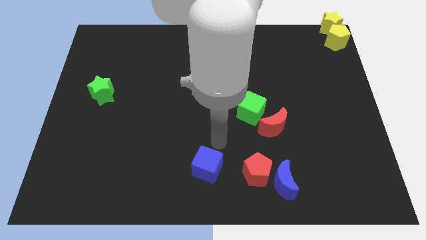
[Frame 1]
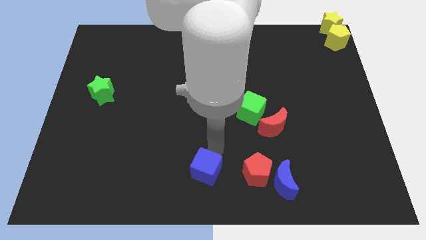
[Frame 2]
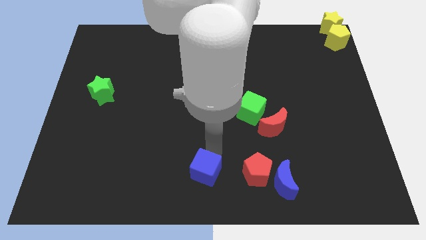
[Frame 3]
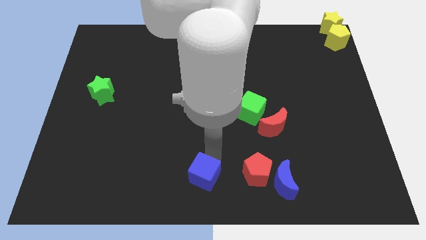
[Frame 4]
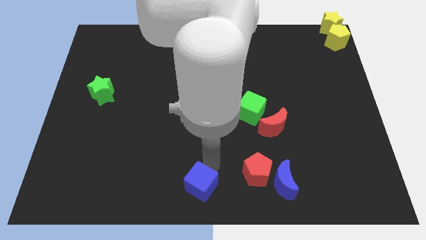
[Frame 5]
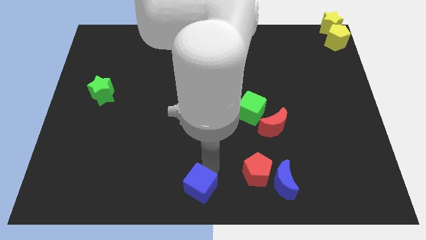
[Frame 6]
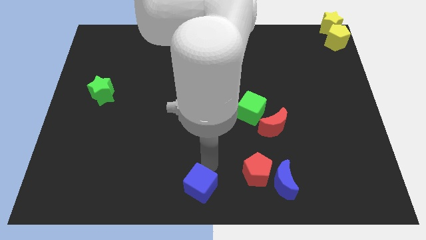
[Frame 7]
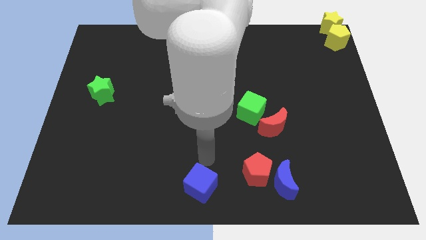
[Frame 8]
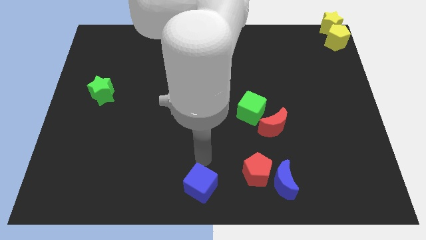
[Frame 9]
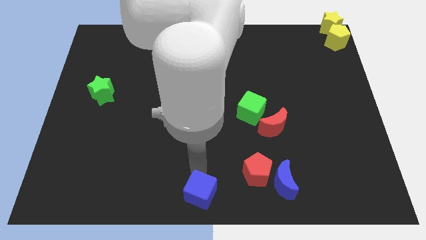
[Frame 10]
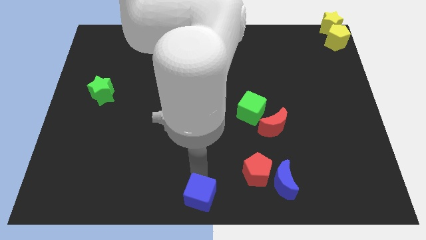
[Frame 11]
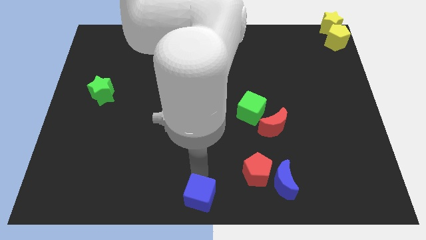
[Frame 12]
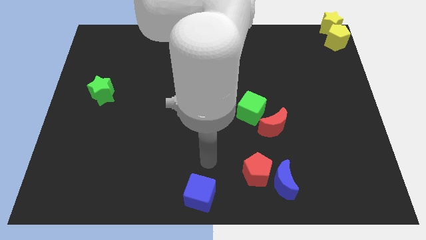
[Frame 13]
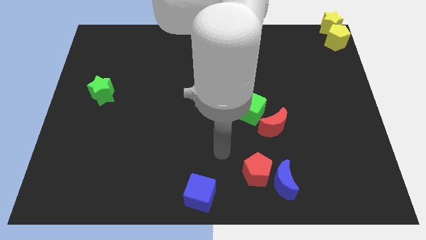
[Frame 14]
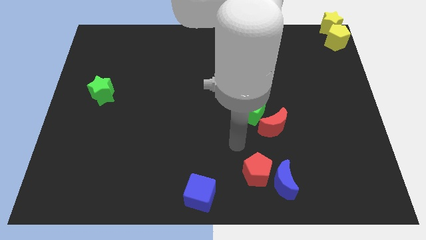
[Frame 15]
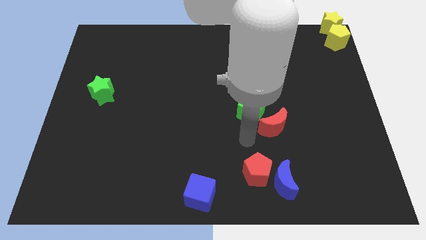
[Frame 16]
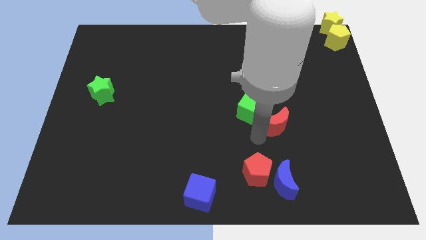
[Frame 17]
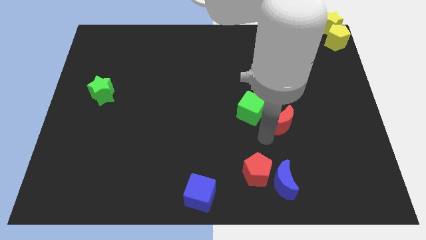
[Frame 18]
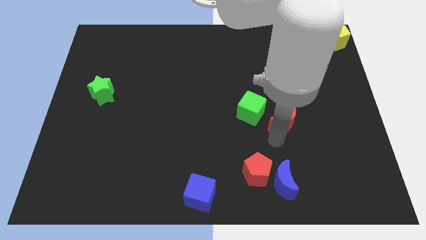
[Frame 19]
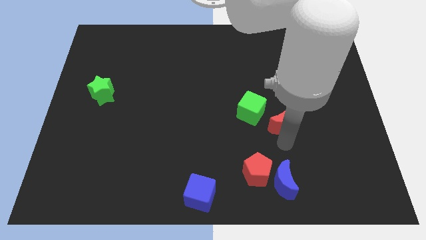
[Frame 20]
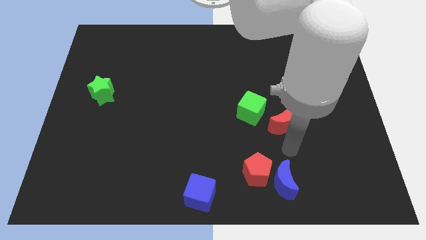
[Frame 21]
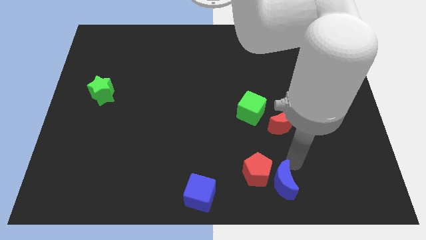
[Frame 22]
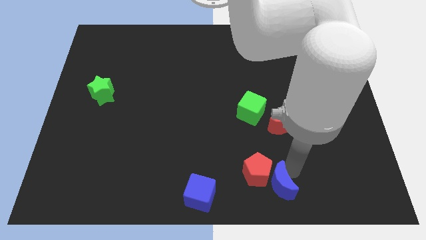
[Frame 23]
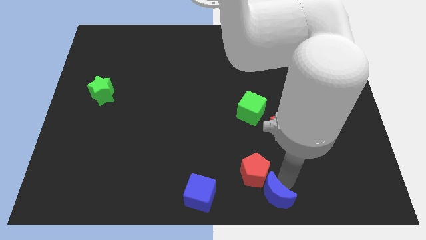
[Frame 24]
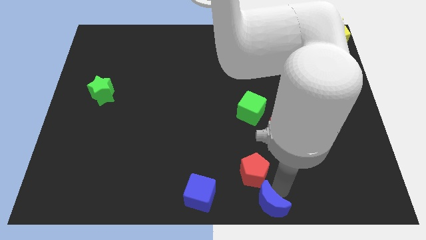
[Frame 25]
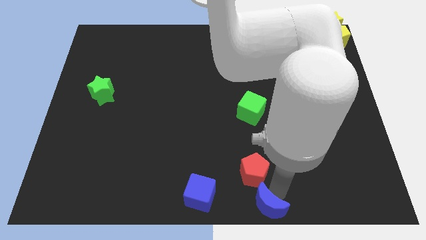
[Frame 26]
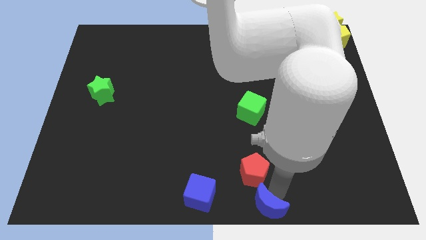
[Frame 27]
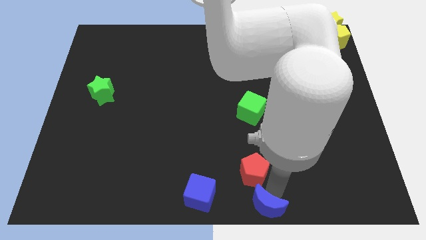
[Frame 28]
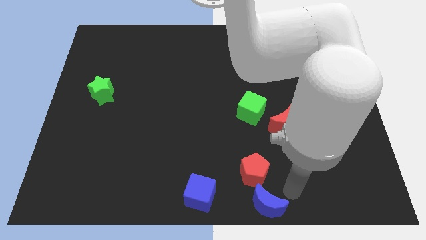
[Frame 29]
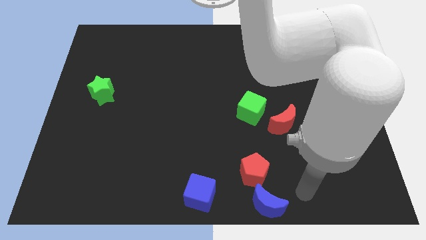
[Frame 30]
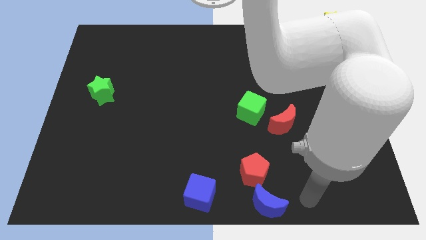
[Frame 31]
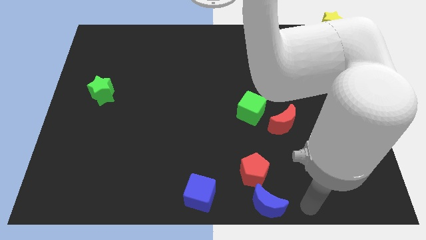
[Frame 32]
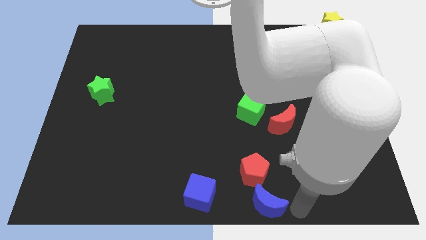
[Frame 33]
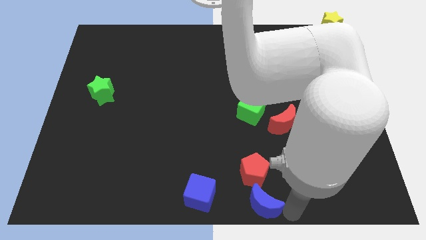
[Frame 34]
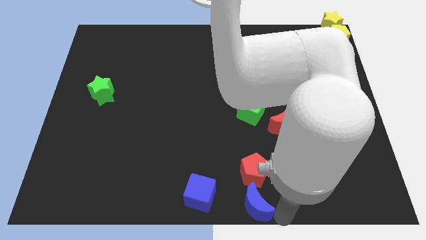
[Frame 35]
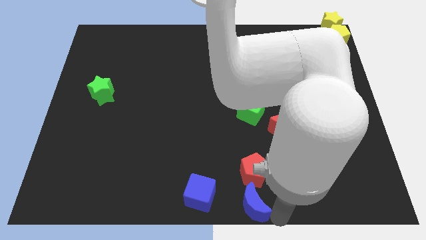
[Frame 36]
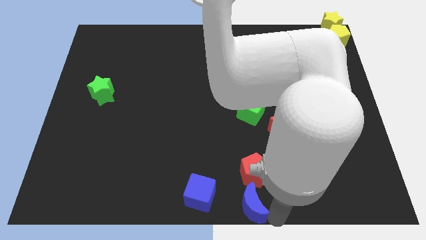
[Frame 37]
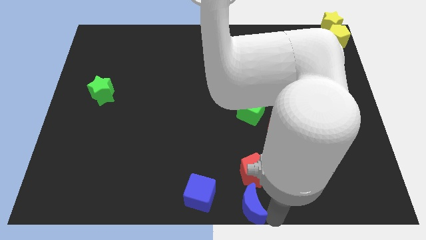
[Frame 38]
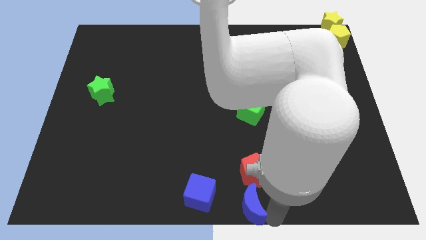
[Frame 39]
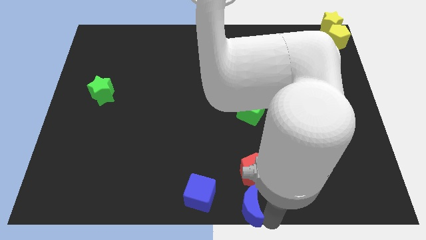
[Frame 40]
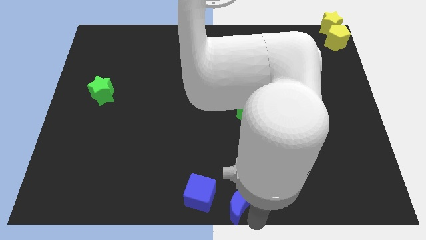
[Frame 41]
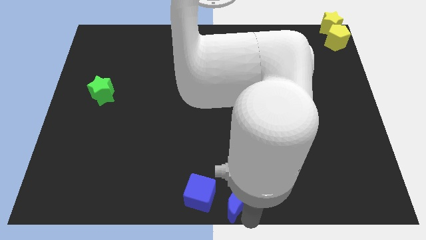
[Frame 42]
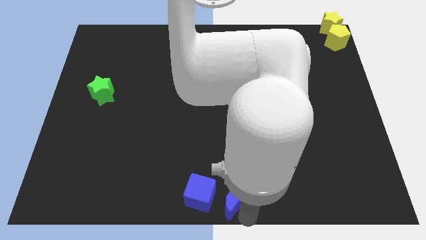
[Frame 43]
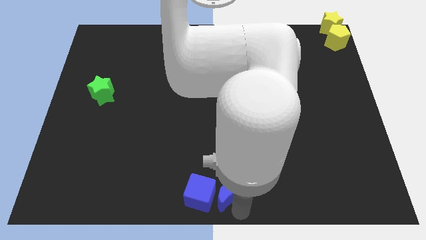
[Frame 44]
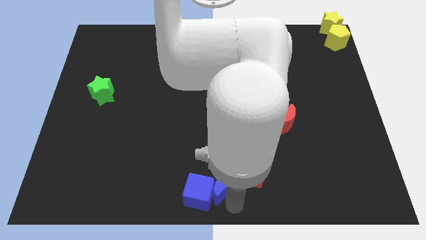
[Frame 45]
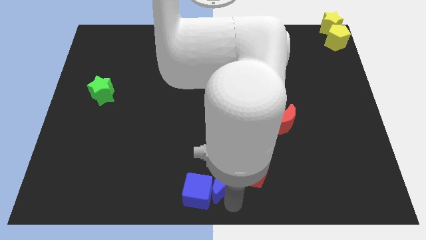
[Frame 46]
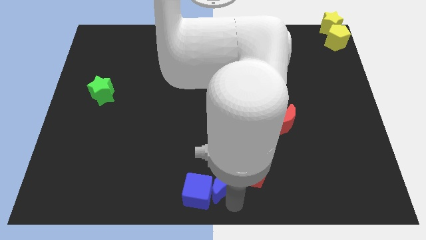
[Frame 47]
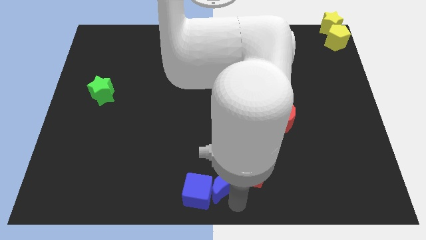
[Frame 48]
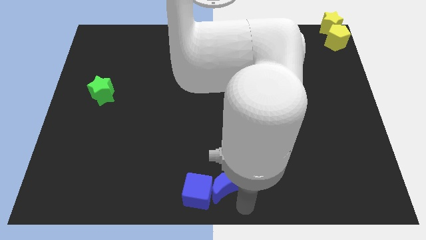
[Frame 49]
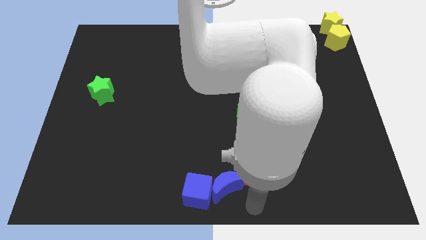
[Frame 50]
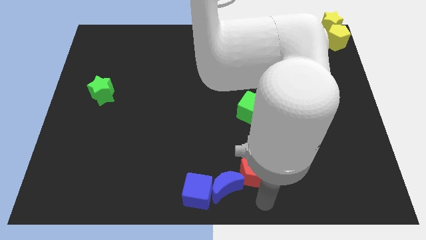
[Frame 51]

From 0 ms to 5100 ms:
place both blue objects together

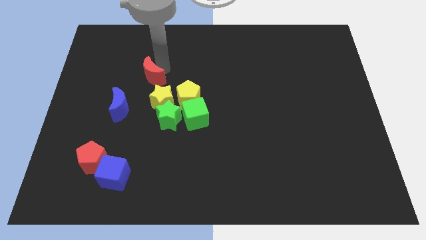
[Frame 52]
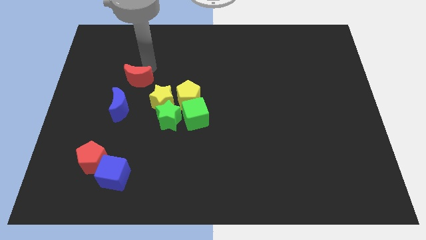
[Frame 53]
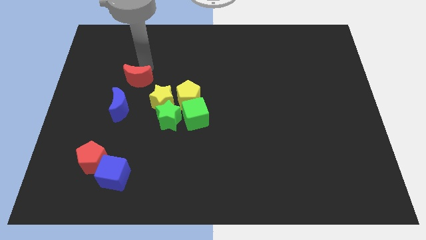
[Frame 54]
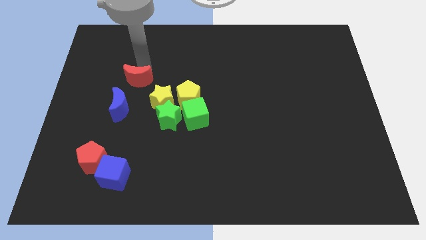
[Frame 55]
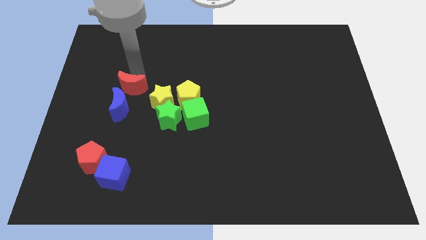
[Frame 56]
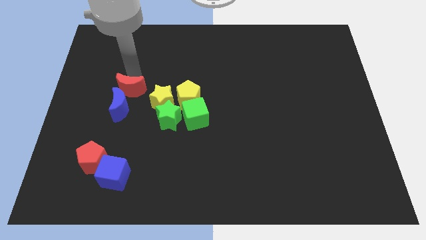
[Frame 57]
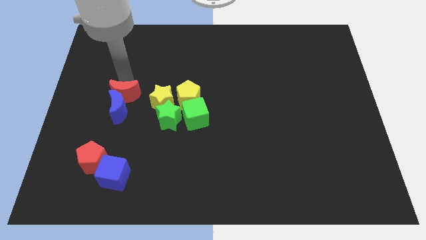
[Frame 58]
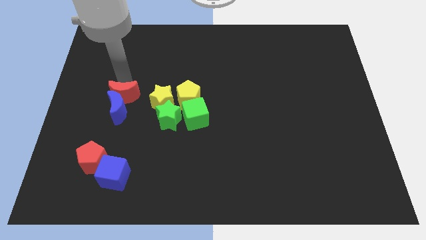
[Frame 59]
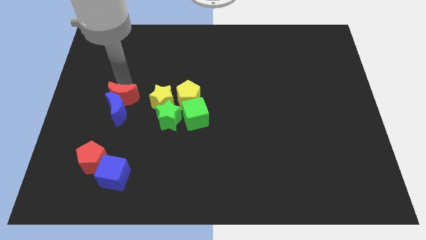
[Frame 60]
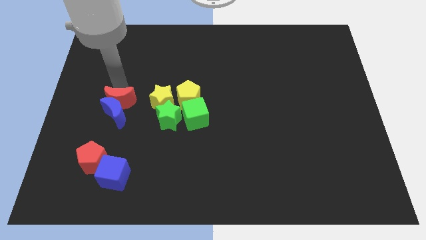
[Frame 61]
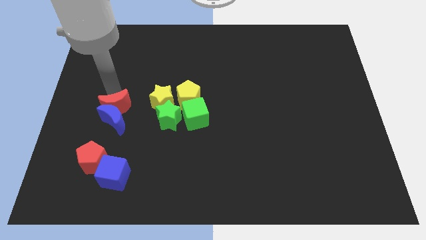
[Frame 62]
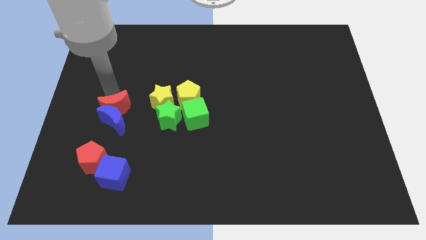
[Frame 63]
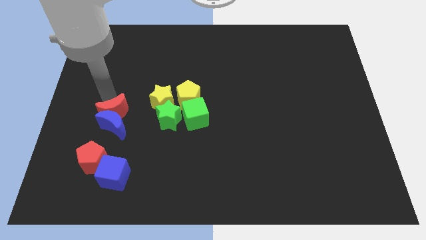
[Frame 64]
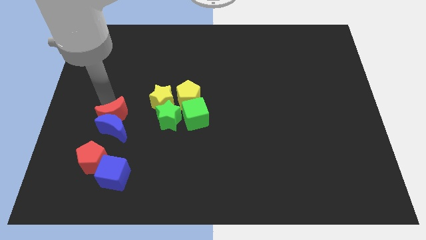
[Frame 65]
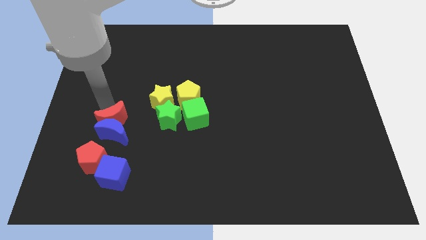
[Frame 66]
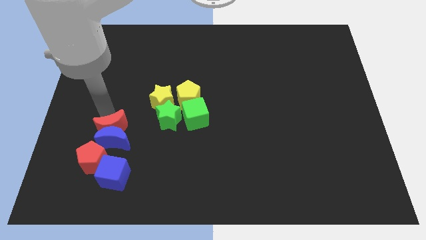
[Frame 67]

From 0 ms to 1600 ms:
push the red crescent into the blue crescent

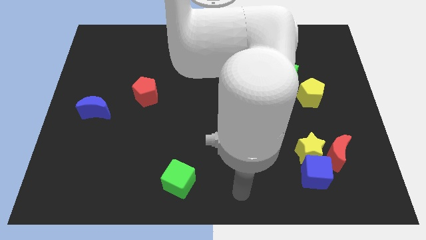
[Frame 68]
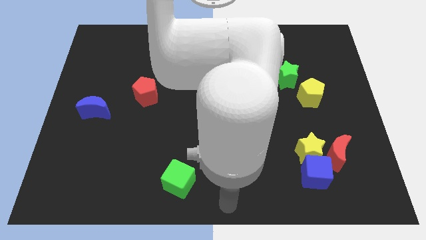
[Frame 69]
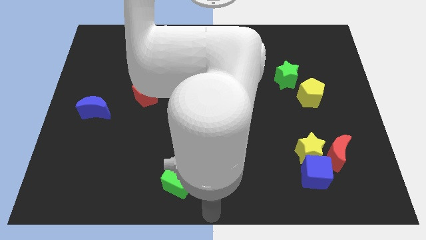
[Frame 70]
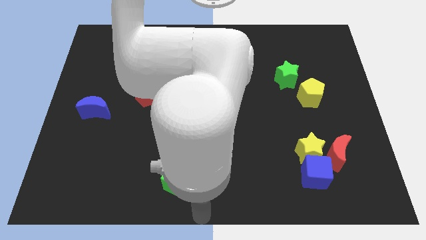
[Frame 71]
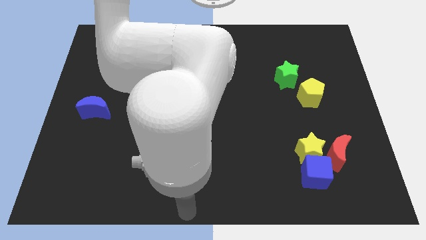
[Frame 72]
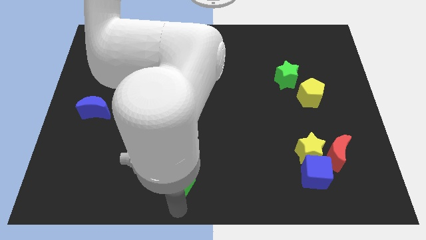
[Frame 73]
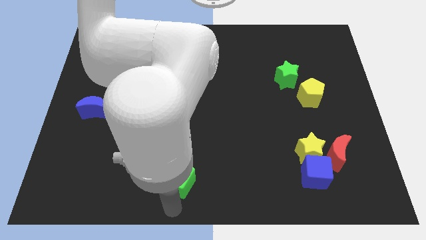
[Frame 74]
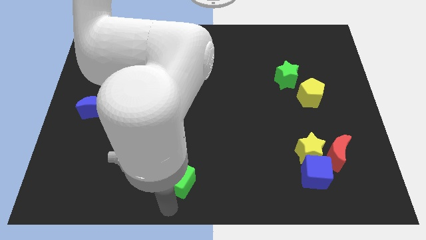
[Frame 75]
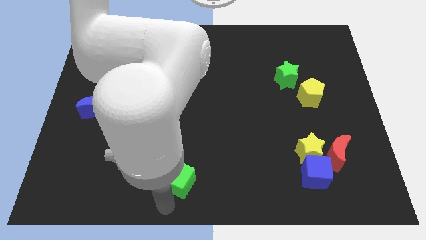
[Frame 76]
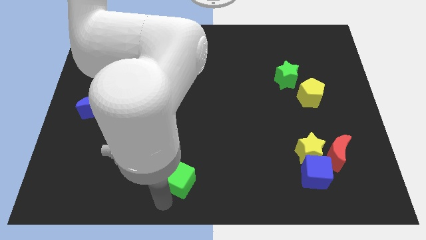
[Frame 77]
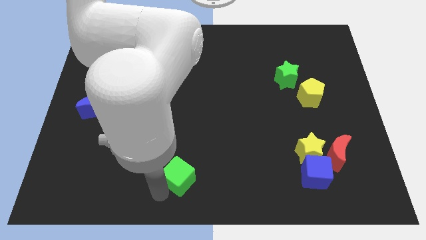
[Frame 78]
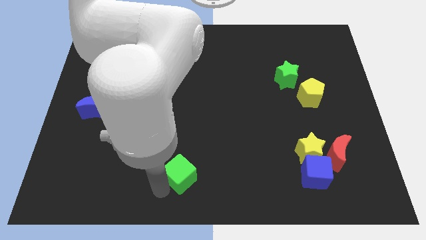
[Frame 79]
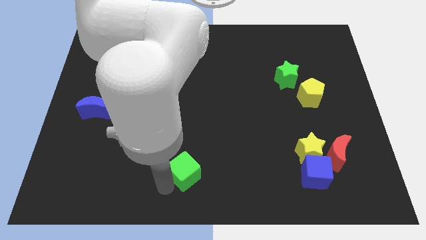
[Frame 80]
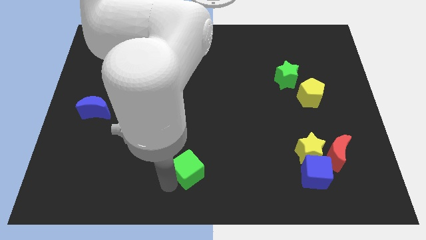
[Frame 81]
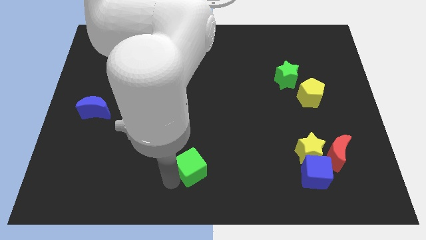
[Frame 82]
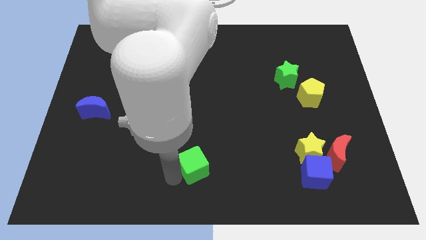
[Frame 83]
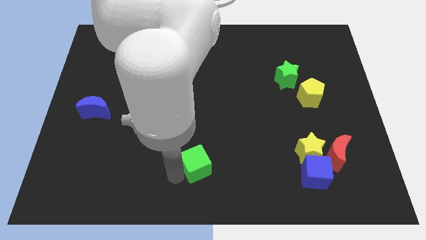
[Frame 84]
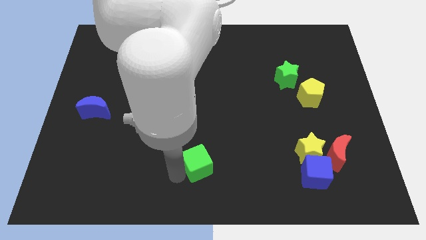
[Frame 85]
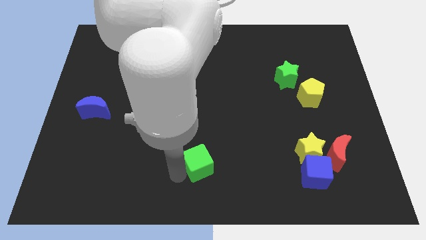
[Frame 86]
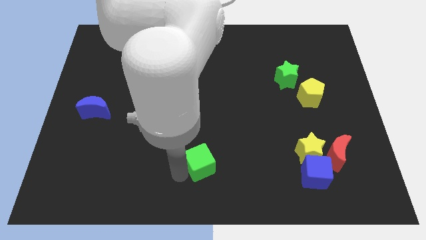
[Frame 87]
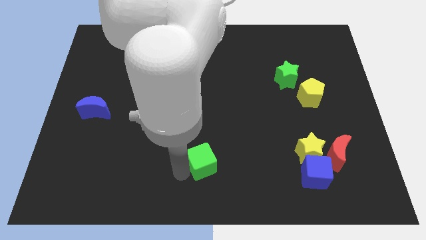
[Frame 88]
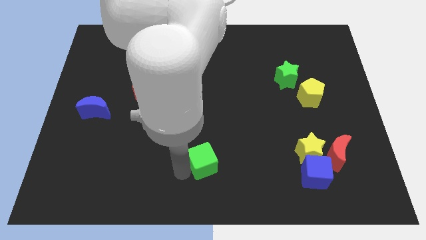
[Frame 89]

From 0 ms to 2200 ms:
move the green star slightly up
